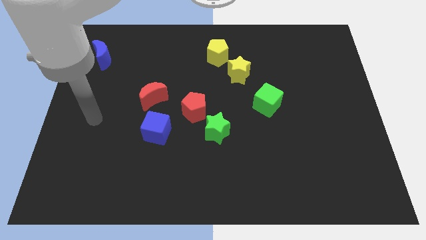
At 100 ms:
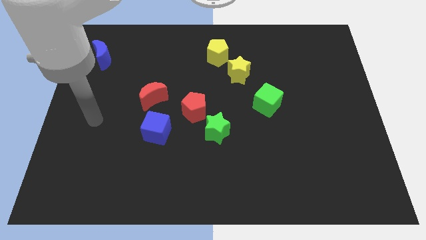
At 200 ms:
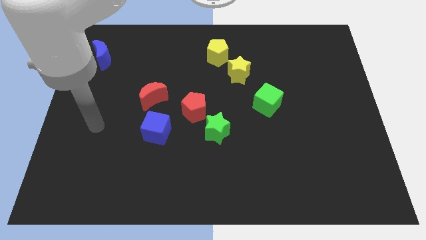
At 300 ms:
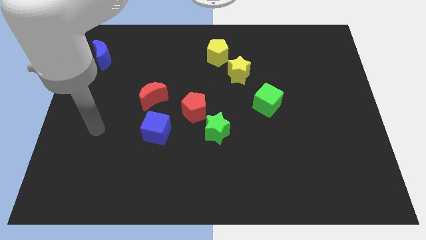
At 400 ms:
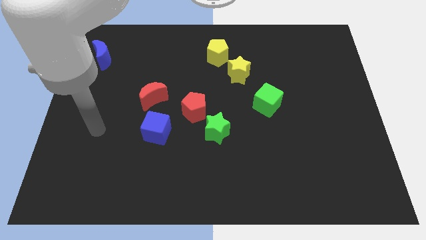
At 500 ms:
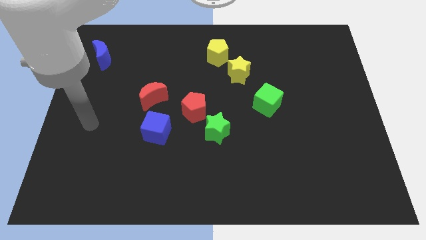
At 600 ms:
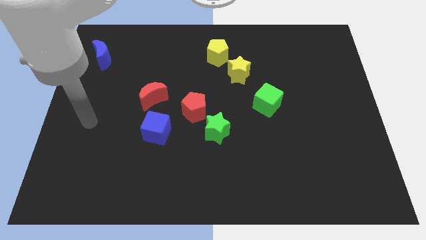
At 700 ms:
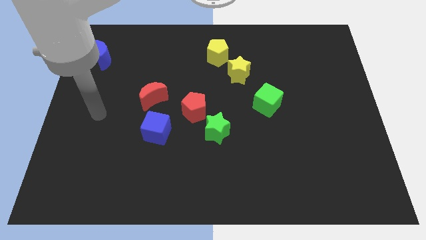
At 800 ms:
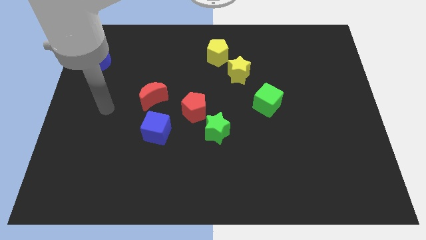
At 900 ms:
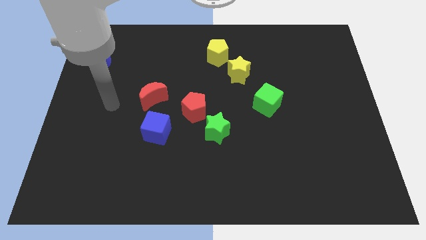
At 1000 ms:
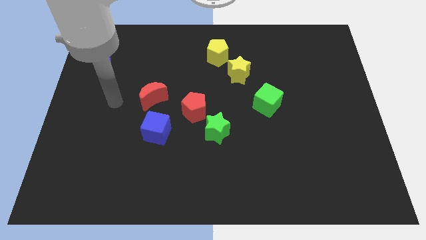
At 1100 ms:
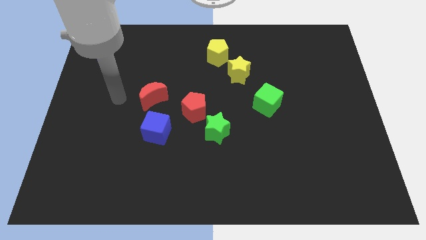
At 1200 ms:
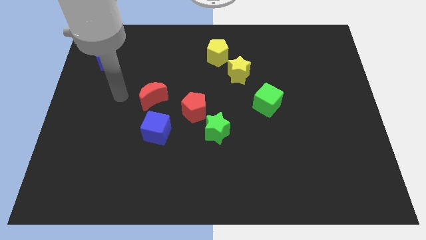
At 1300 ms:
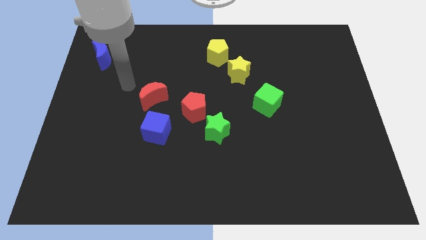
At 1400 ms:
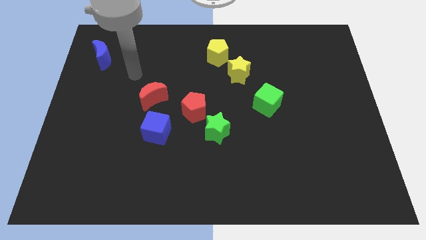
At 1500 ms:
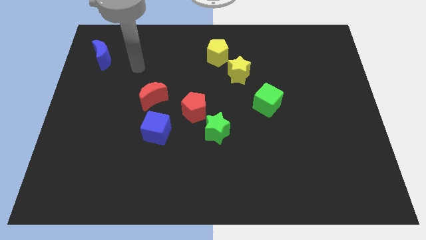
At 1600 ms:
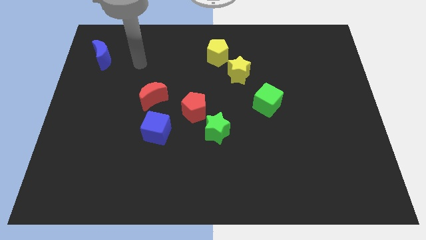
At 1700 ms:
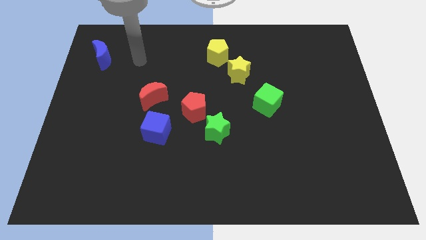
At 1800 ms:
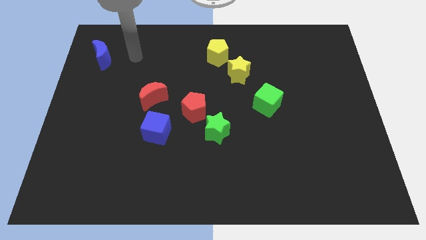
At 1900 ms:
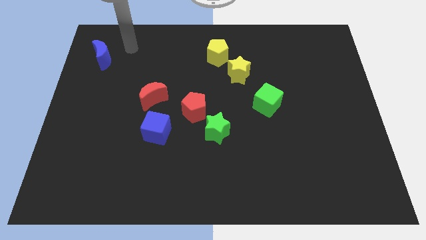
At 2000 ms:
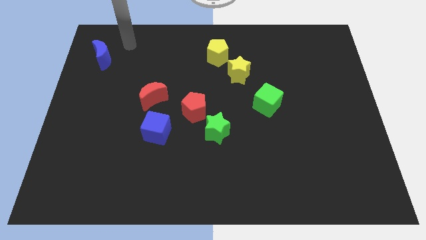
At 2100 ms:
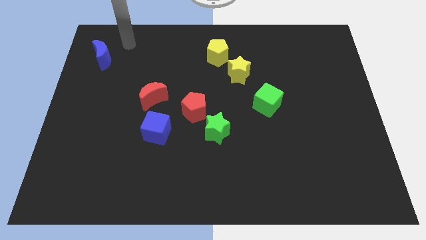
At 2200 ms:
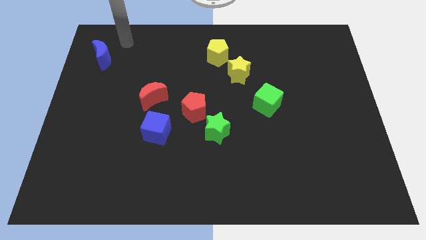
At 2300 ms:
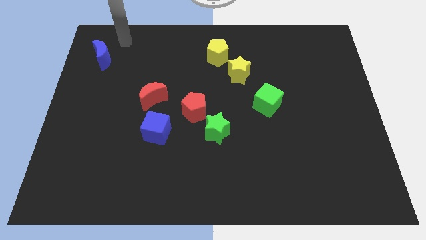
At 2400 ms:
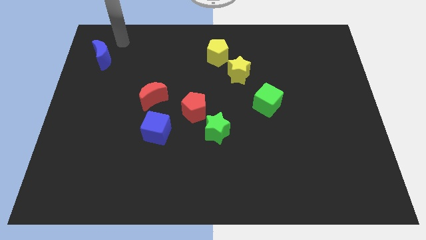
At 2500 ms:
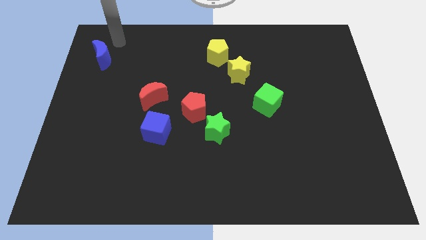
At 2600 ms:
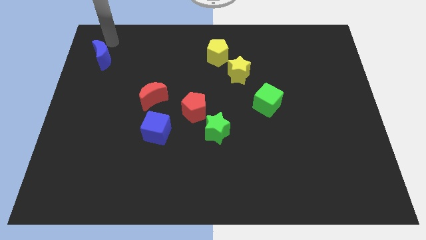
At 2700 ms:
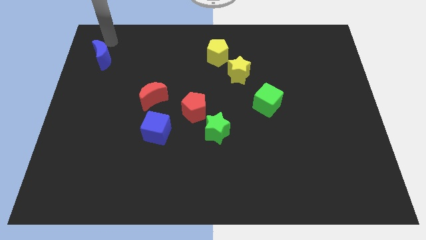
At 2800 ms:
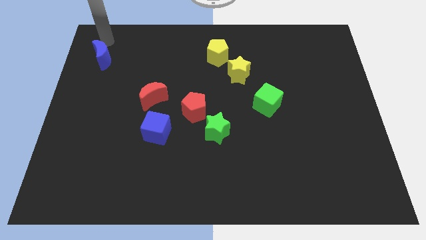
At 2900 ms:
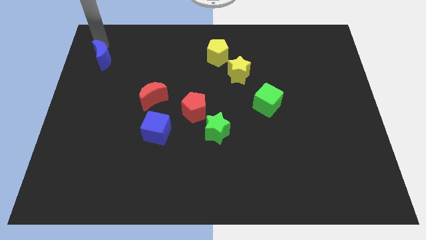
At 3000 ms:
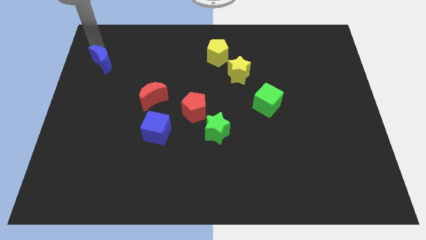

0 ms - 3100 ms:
tap your arm on the top edge of blue moon

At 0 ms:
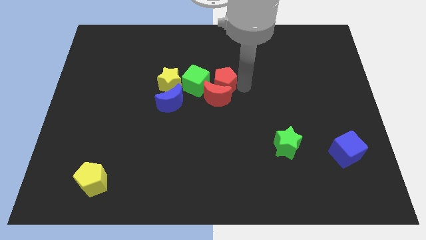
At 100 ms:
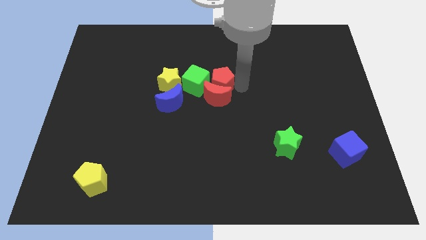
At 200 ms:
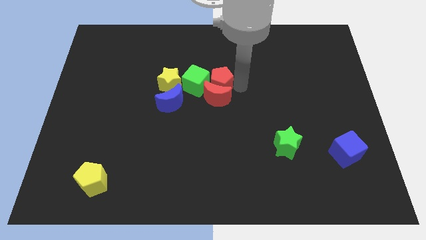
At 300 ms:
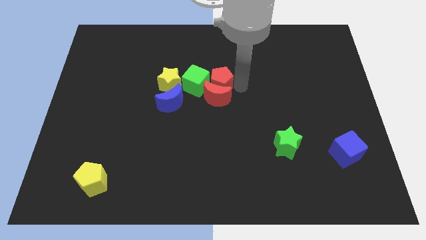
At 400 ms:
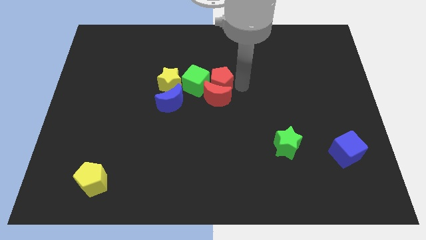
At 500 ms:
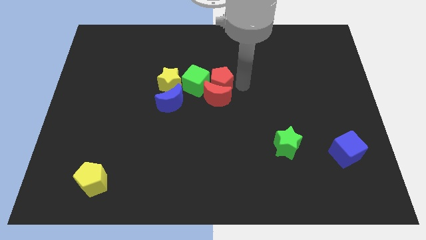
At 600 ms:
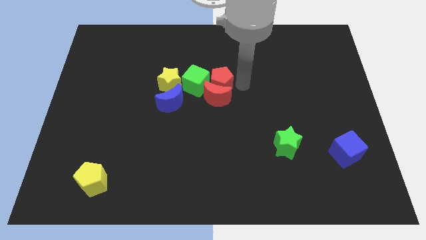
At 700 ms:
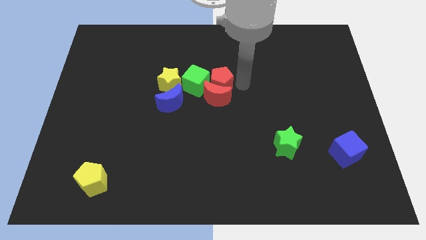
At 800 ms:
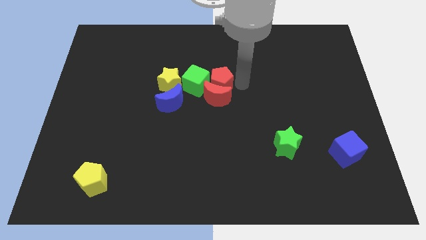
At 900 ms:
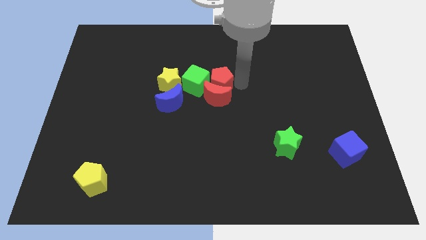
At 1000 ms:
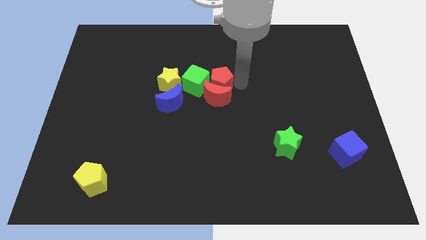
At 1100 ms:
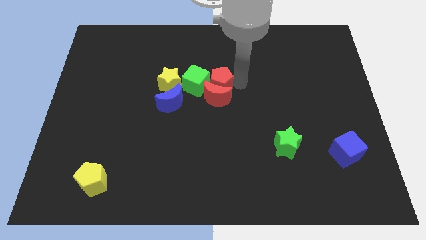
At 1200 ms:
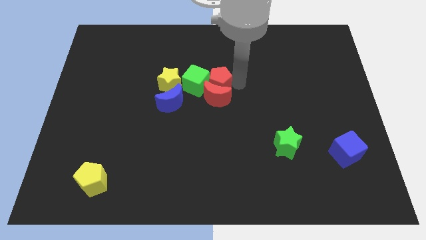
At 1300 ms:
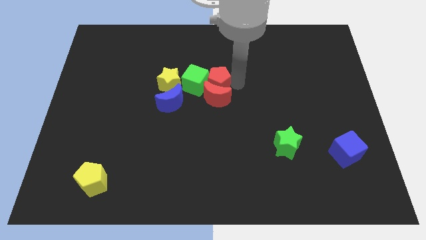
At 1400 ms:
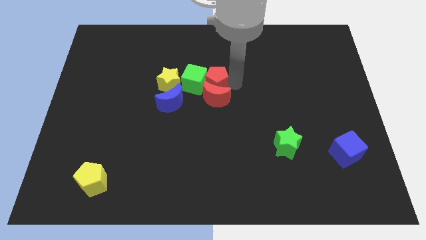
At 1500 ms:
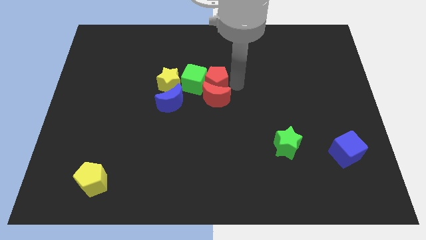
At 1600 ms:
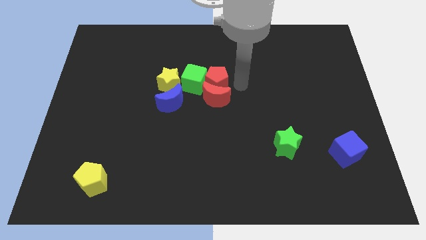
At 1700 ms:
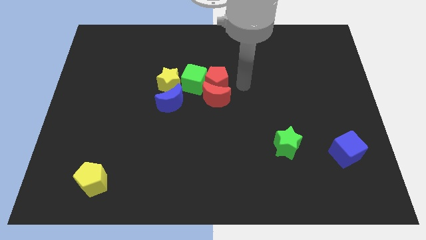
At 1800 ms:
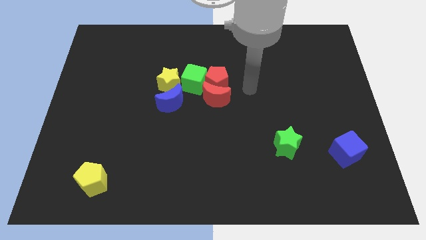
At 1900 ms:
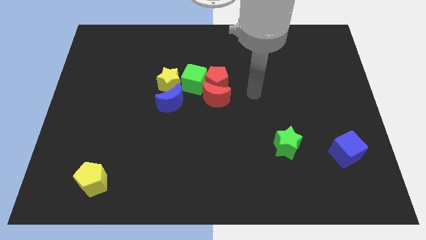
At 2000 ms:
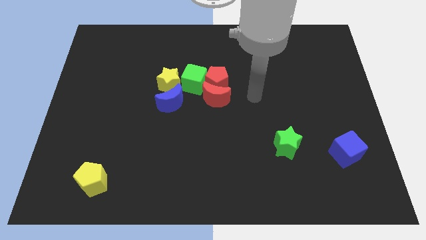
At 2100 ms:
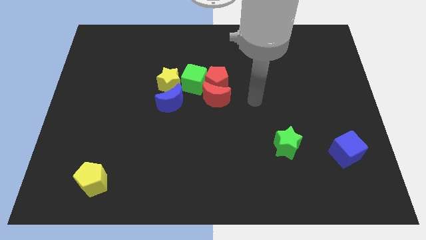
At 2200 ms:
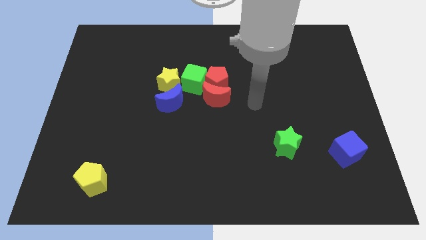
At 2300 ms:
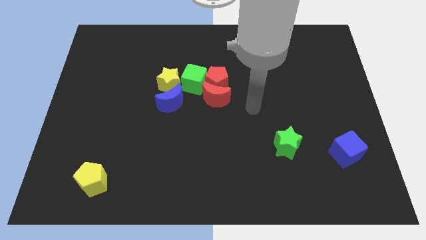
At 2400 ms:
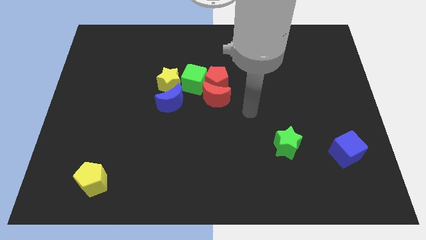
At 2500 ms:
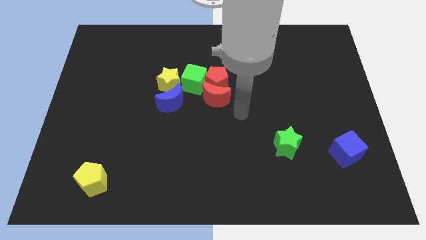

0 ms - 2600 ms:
push the green cube slightly using the red pentagon

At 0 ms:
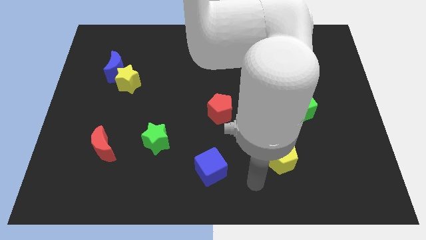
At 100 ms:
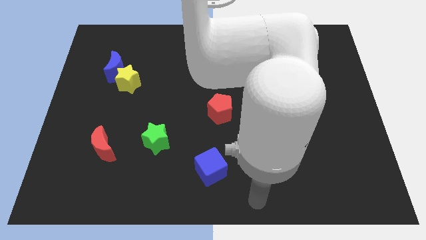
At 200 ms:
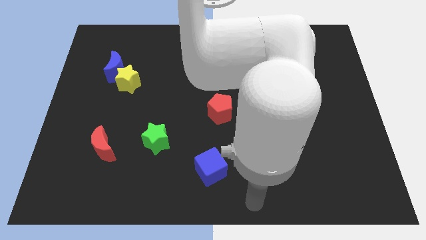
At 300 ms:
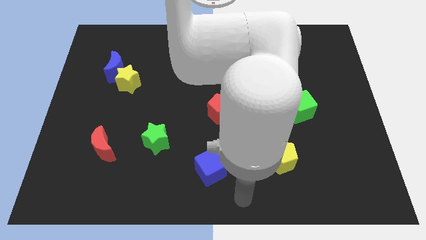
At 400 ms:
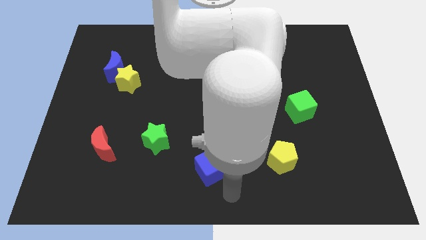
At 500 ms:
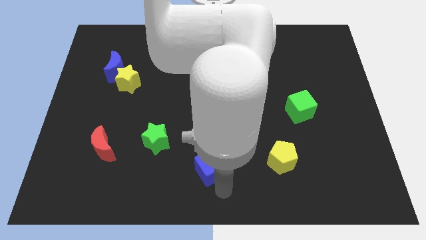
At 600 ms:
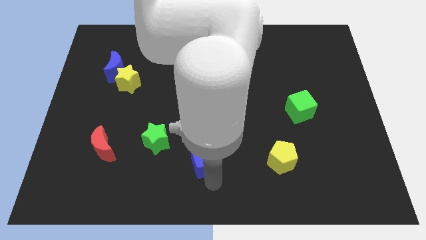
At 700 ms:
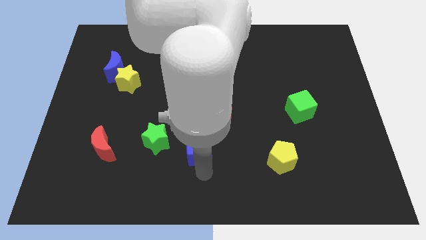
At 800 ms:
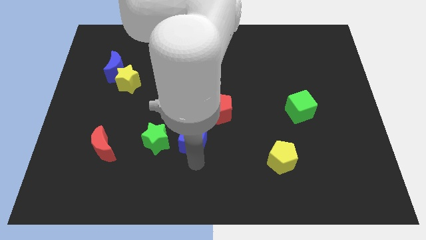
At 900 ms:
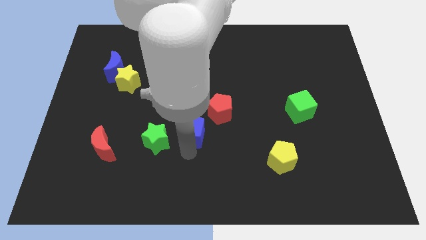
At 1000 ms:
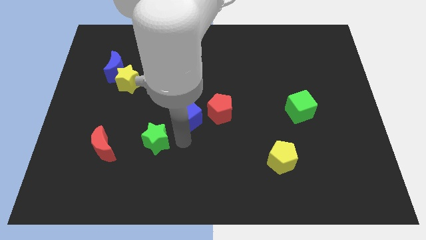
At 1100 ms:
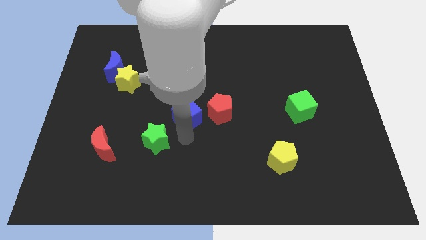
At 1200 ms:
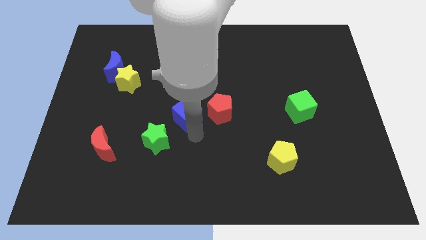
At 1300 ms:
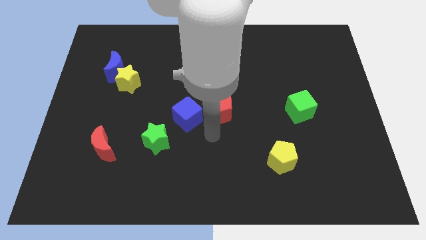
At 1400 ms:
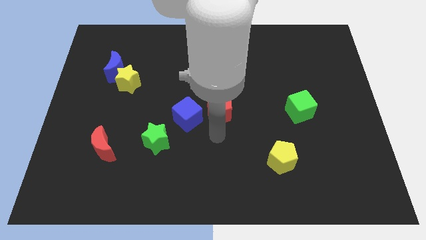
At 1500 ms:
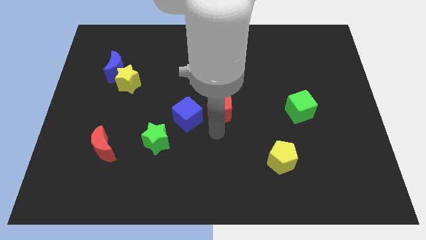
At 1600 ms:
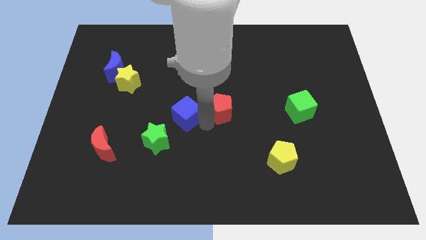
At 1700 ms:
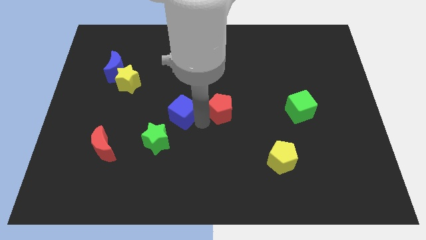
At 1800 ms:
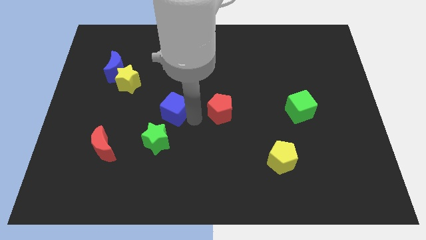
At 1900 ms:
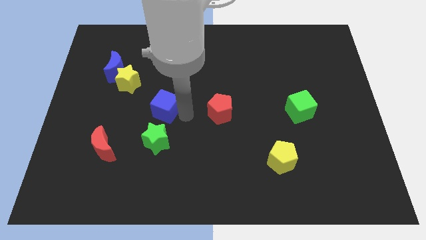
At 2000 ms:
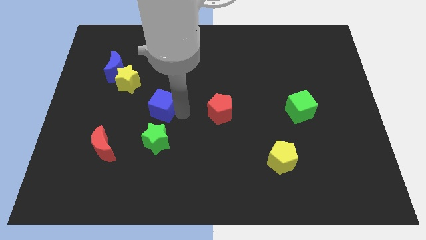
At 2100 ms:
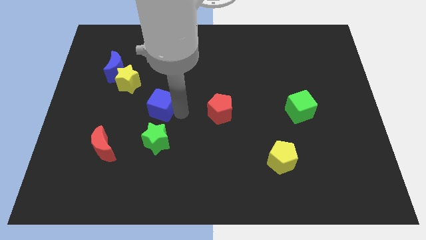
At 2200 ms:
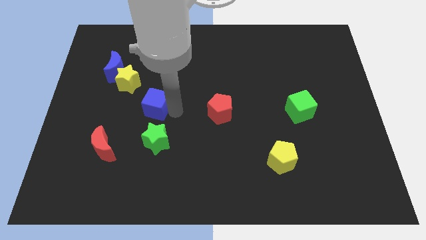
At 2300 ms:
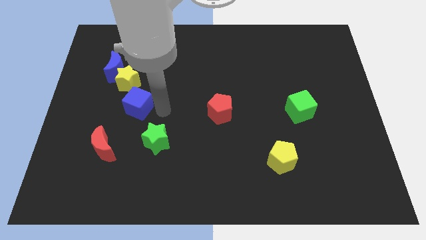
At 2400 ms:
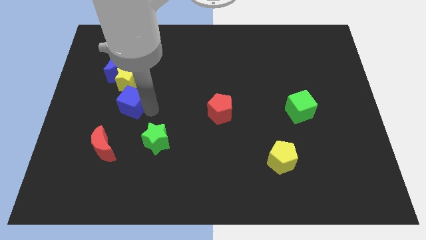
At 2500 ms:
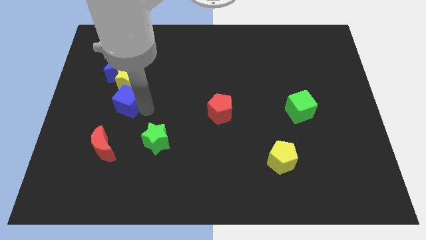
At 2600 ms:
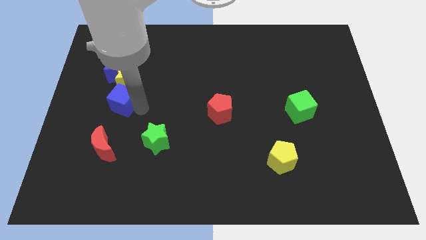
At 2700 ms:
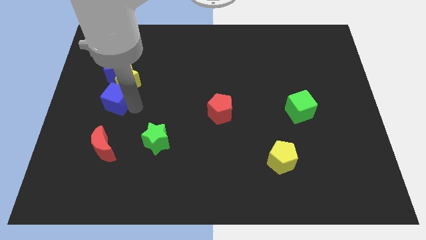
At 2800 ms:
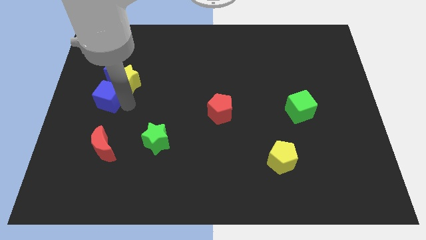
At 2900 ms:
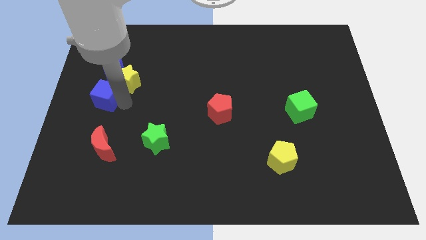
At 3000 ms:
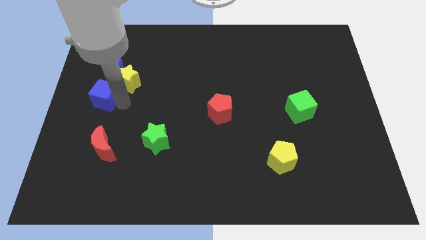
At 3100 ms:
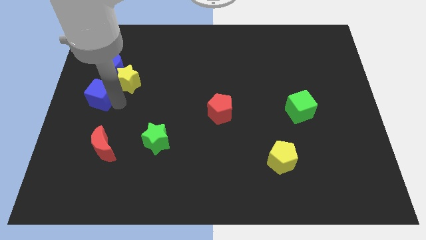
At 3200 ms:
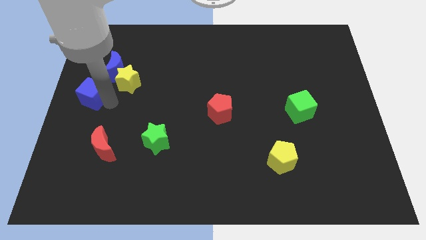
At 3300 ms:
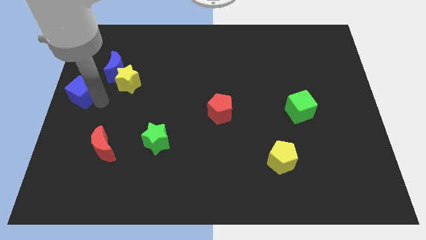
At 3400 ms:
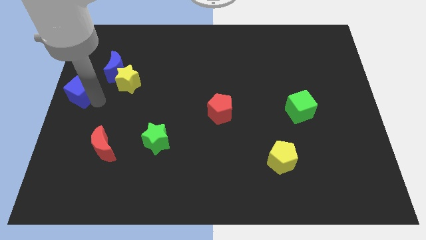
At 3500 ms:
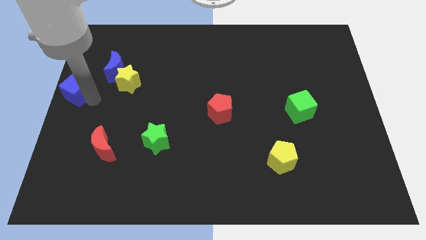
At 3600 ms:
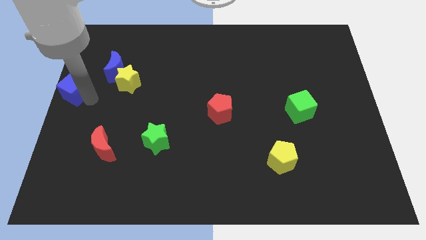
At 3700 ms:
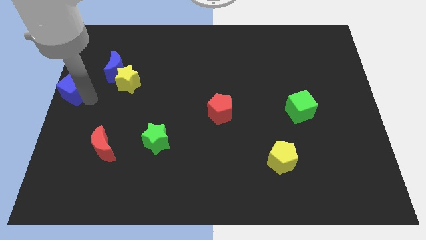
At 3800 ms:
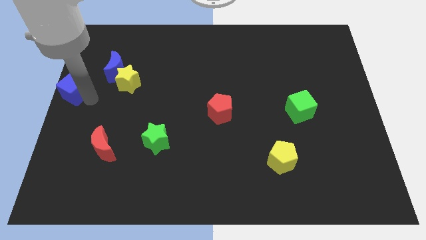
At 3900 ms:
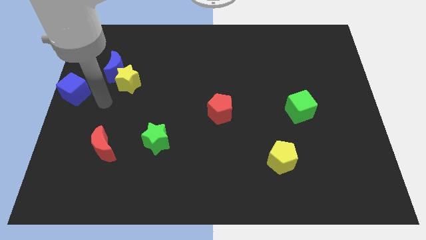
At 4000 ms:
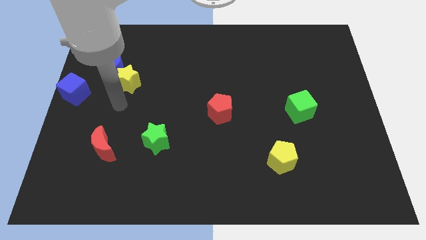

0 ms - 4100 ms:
push the blue cube to the center left
